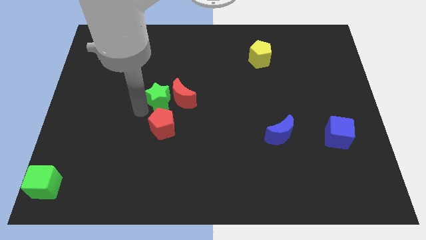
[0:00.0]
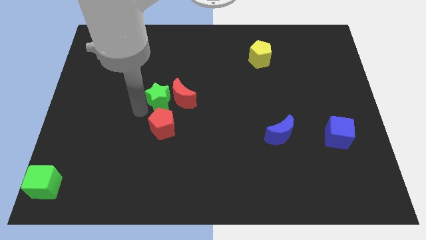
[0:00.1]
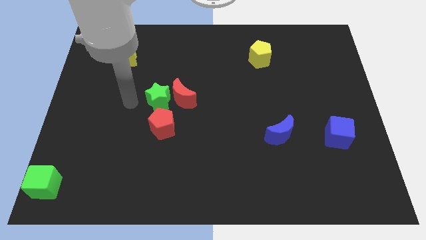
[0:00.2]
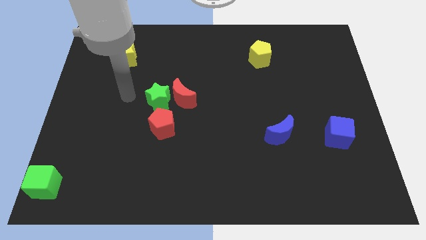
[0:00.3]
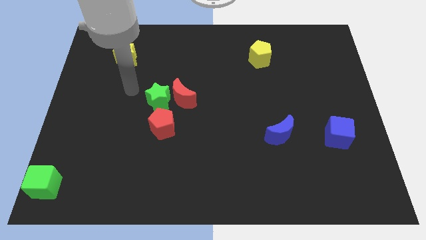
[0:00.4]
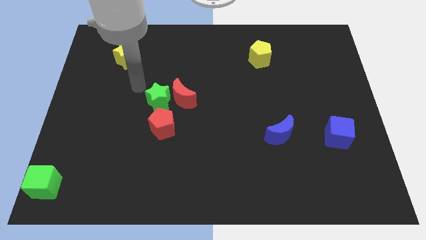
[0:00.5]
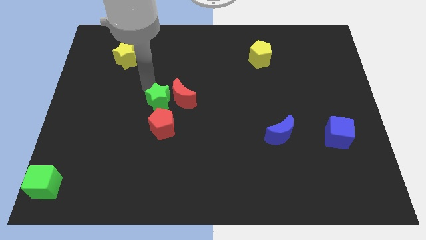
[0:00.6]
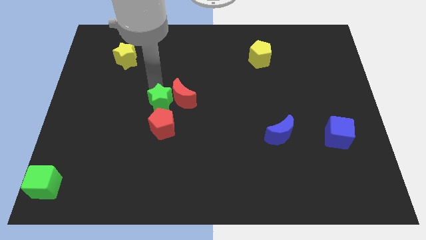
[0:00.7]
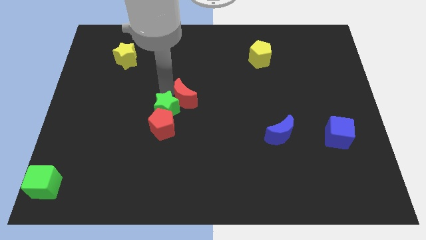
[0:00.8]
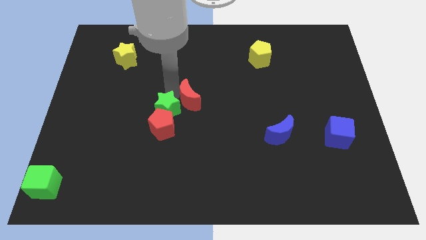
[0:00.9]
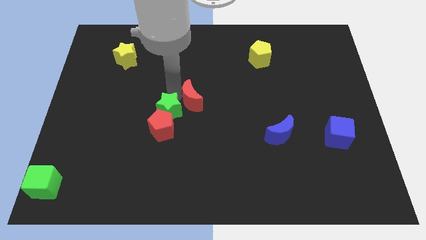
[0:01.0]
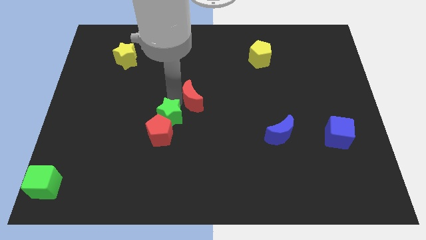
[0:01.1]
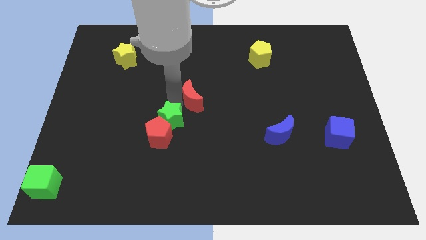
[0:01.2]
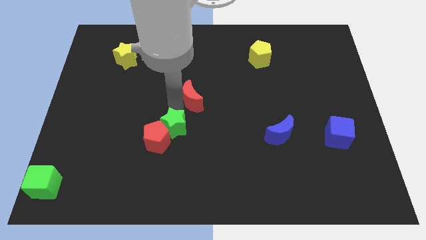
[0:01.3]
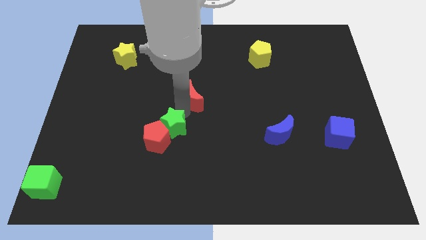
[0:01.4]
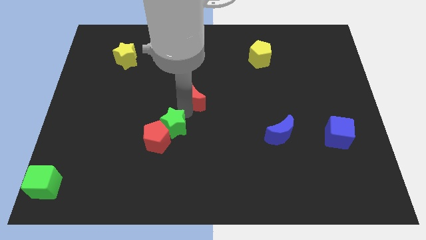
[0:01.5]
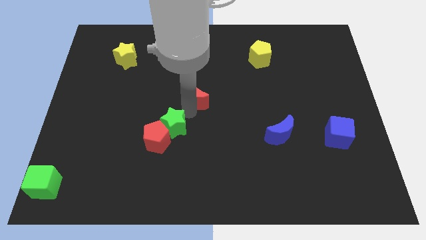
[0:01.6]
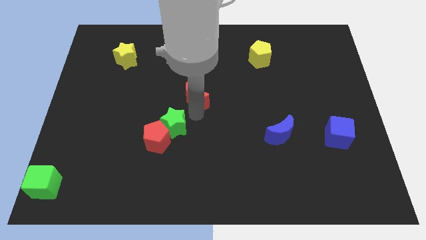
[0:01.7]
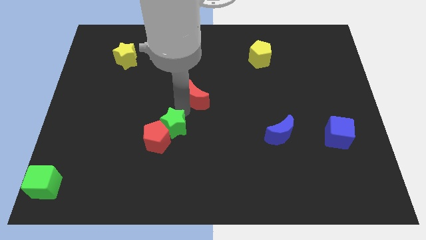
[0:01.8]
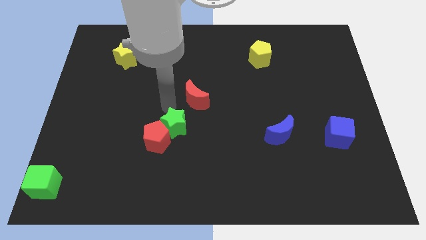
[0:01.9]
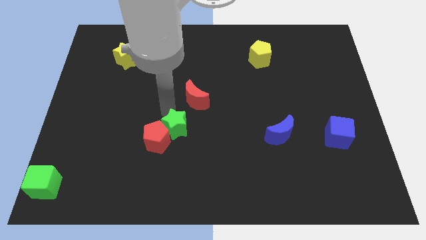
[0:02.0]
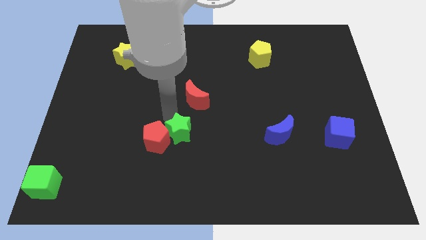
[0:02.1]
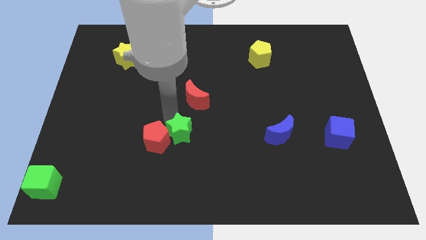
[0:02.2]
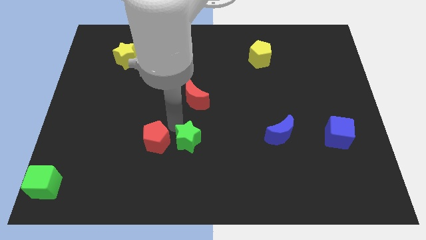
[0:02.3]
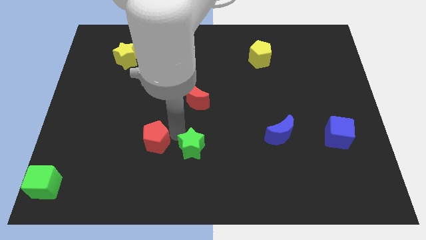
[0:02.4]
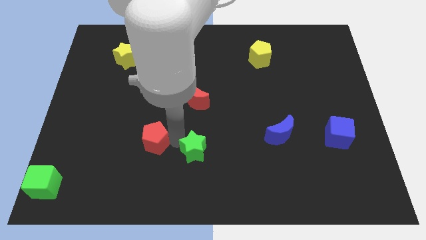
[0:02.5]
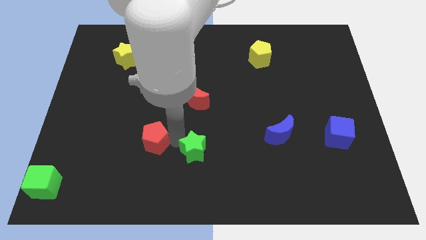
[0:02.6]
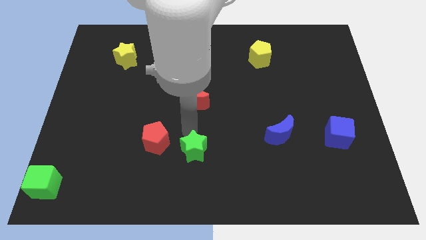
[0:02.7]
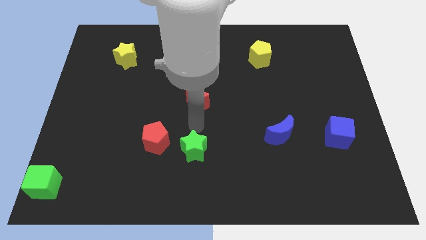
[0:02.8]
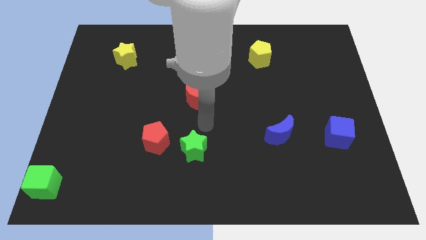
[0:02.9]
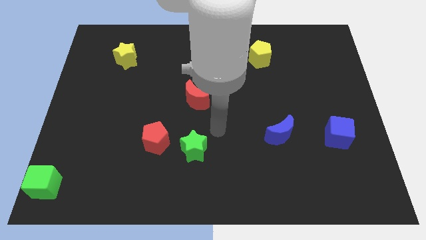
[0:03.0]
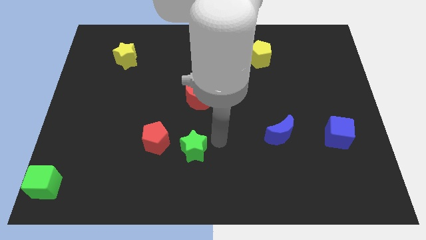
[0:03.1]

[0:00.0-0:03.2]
separate the red blocks with green star

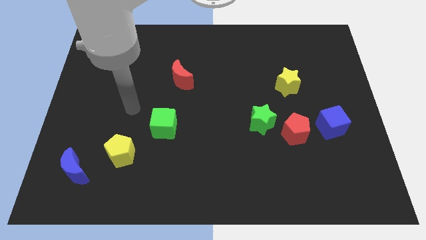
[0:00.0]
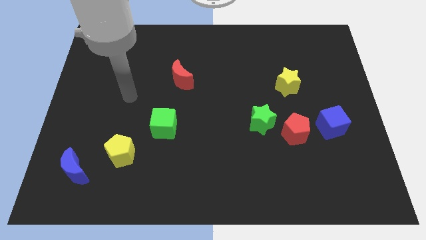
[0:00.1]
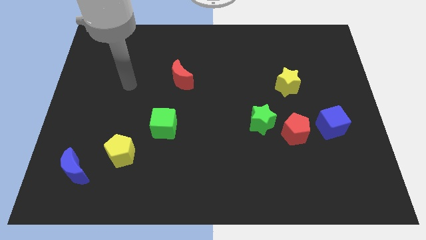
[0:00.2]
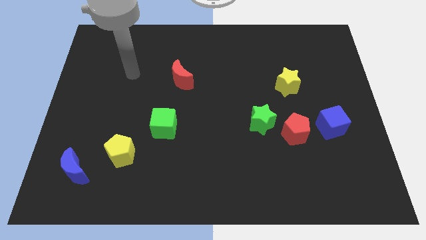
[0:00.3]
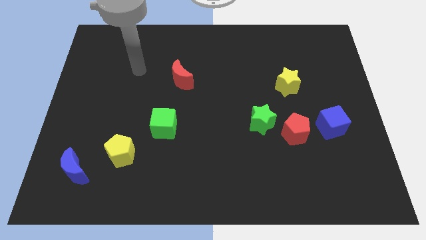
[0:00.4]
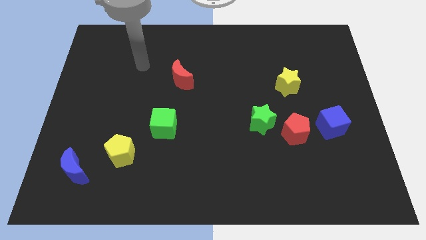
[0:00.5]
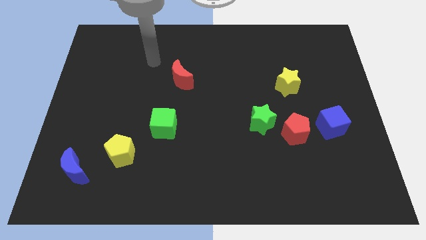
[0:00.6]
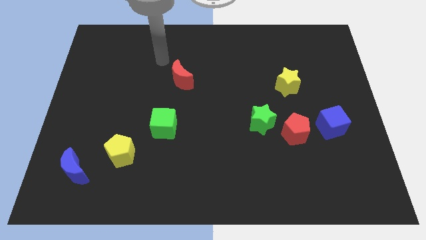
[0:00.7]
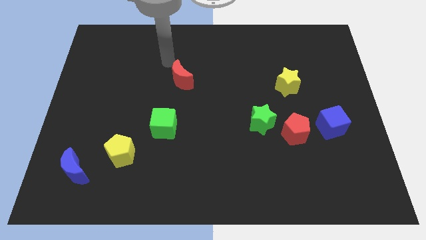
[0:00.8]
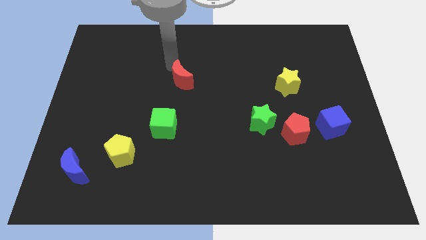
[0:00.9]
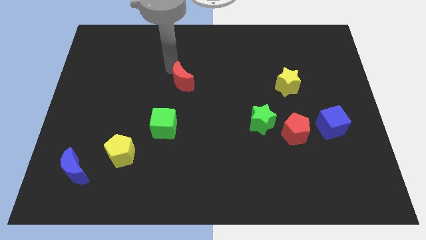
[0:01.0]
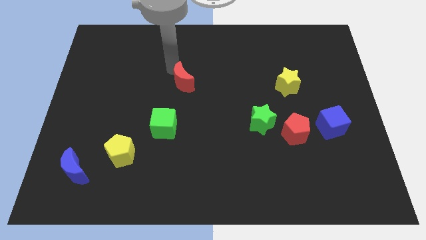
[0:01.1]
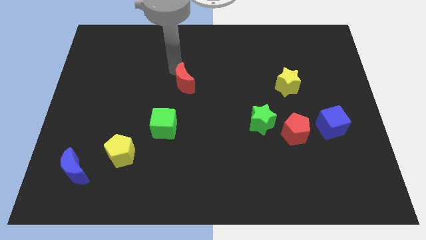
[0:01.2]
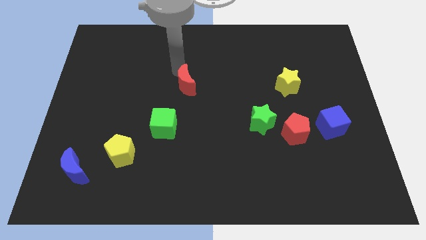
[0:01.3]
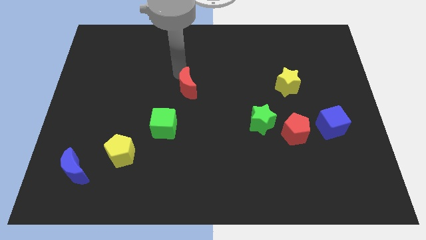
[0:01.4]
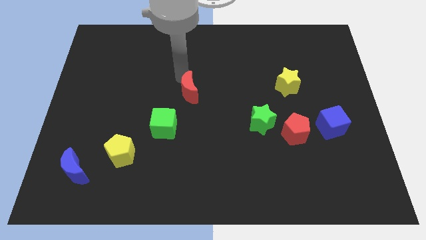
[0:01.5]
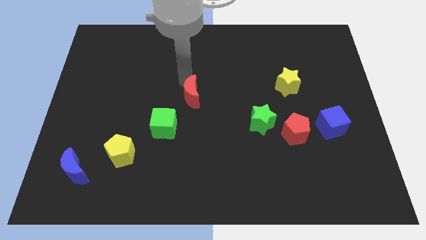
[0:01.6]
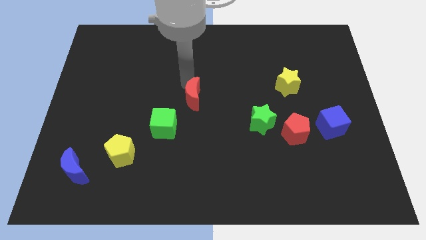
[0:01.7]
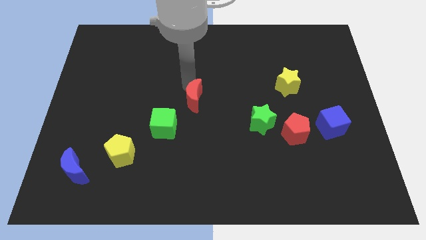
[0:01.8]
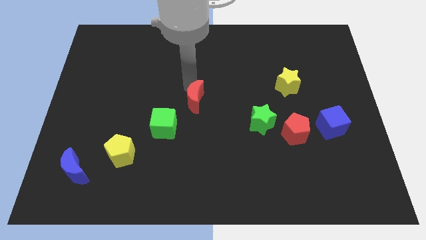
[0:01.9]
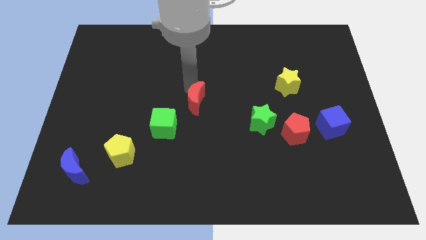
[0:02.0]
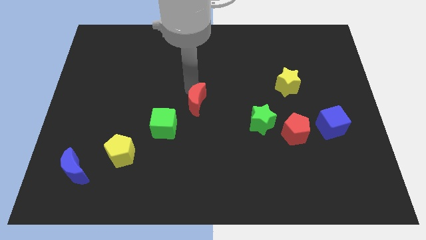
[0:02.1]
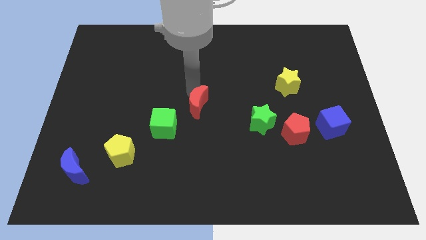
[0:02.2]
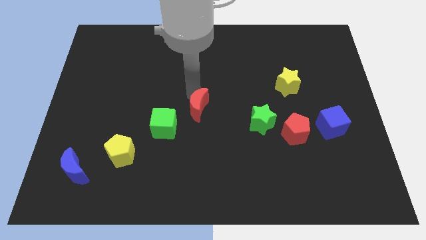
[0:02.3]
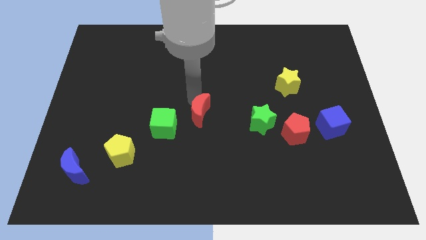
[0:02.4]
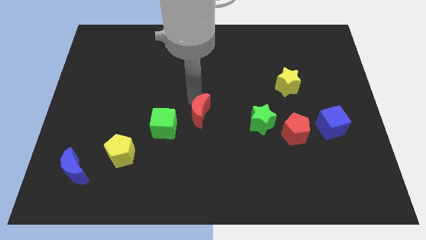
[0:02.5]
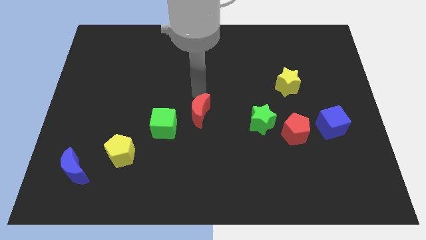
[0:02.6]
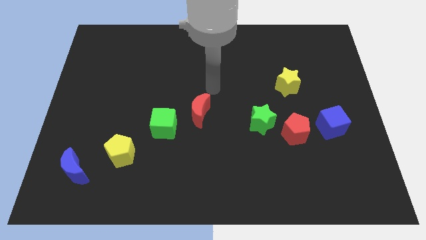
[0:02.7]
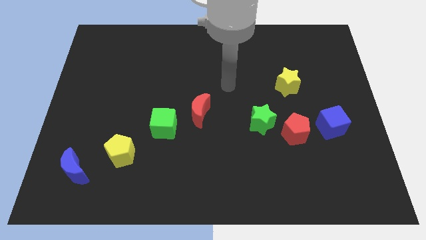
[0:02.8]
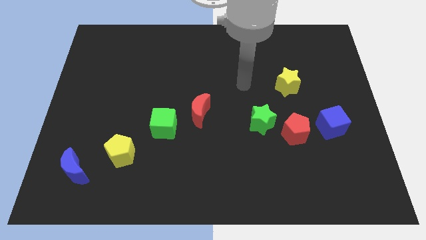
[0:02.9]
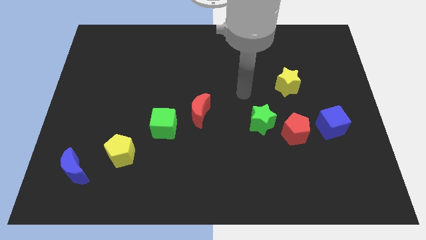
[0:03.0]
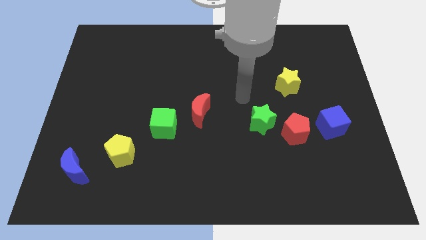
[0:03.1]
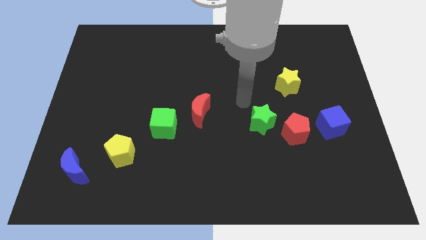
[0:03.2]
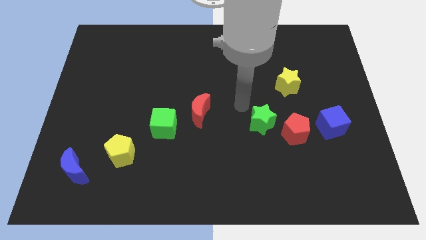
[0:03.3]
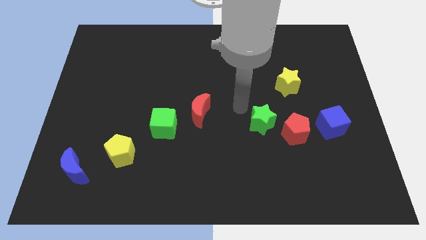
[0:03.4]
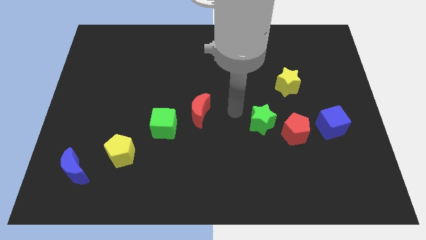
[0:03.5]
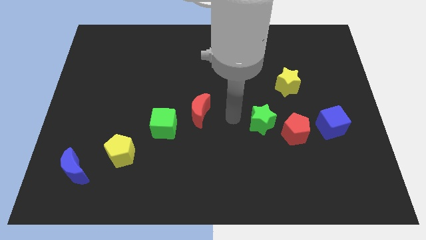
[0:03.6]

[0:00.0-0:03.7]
place the red moon to the right of the green cube

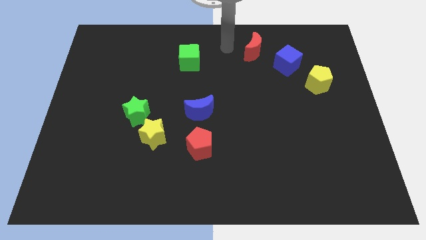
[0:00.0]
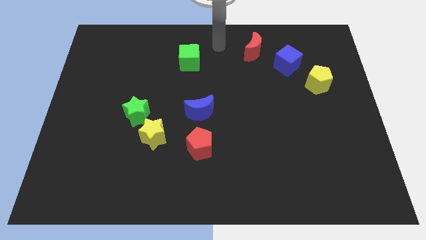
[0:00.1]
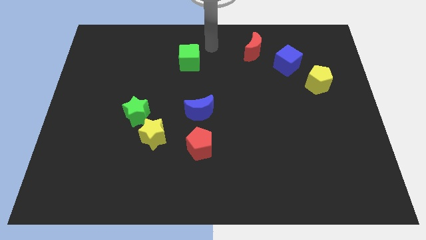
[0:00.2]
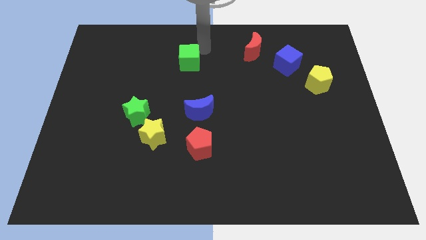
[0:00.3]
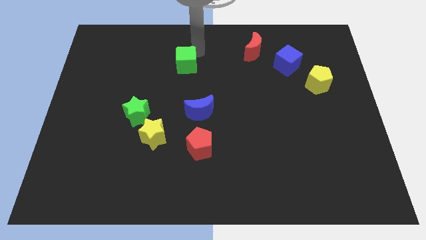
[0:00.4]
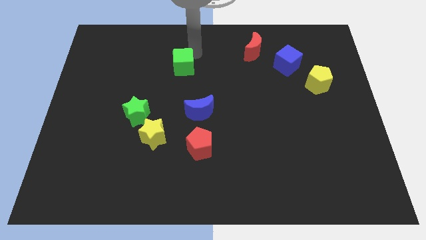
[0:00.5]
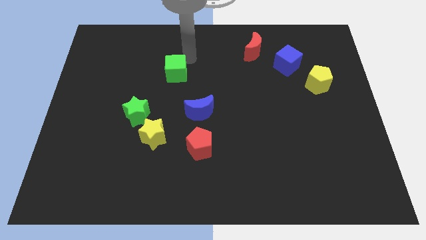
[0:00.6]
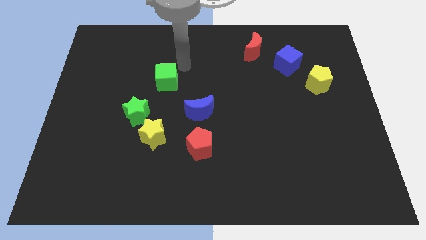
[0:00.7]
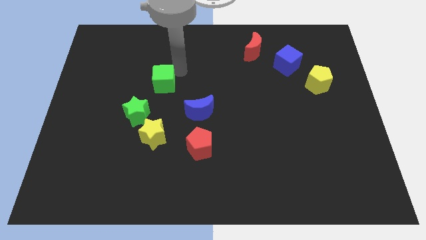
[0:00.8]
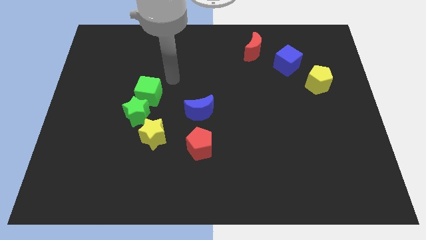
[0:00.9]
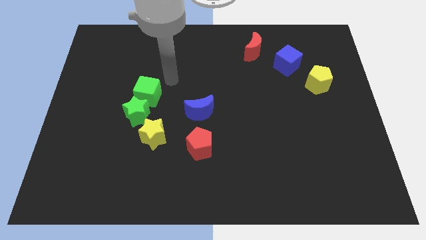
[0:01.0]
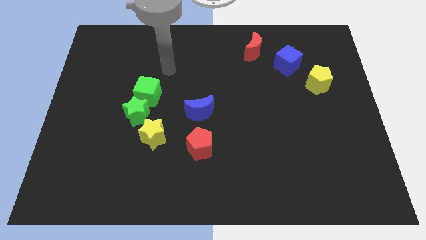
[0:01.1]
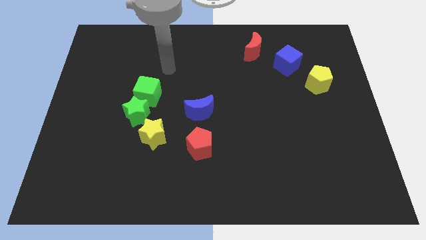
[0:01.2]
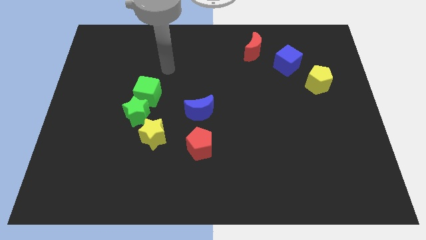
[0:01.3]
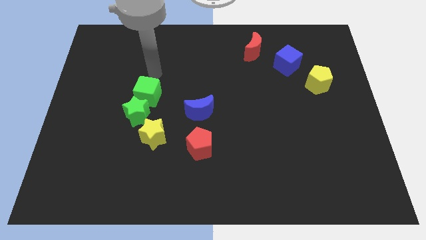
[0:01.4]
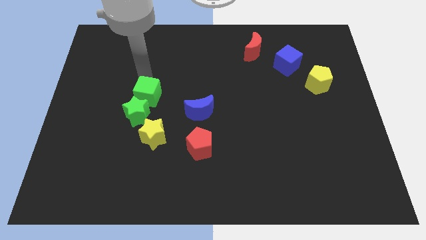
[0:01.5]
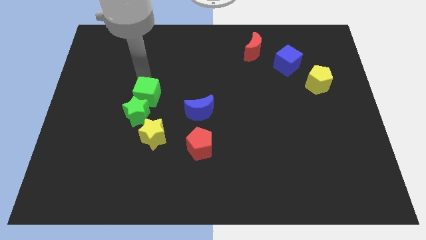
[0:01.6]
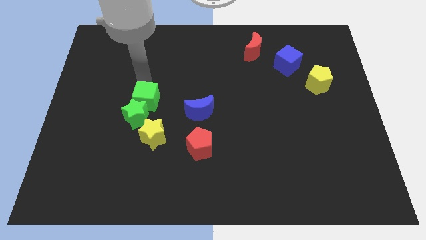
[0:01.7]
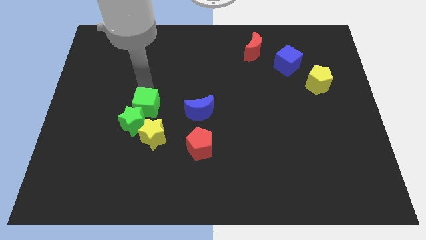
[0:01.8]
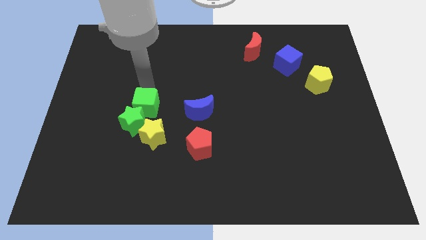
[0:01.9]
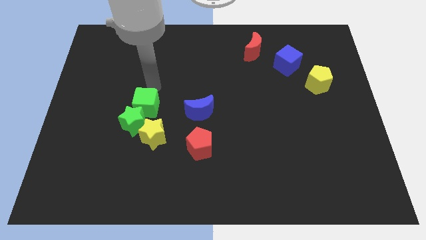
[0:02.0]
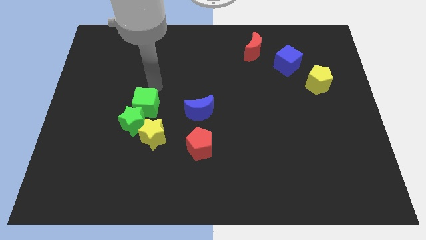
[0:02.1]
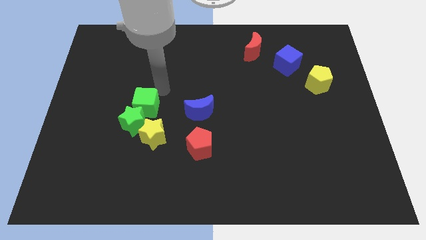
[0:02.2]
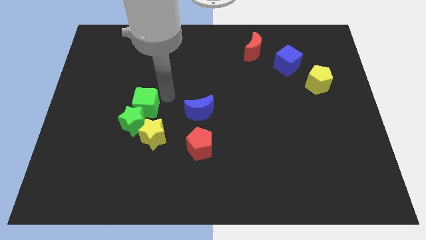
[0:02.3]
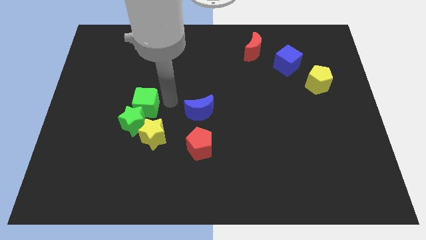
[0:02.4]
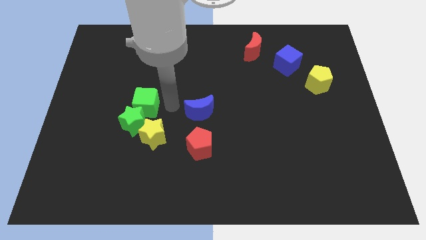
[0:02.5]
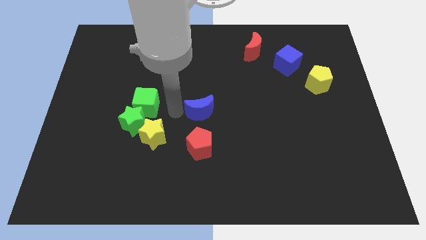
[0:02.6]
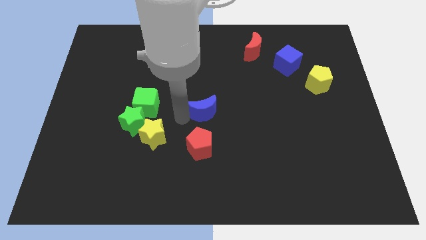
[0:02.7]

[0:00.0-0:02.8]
push the green cube into th green star
